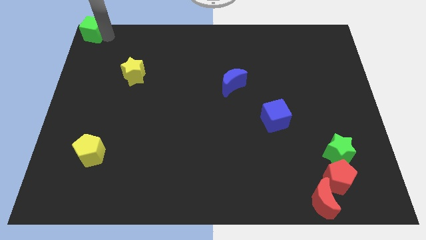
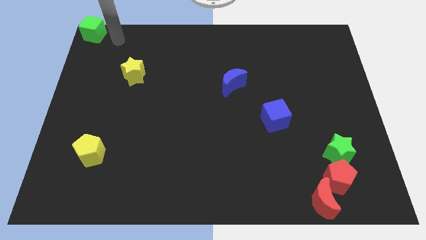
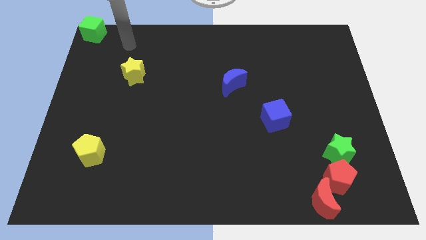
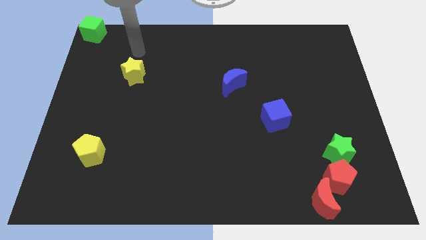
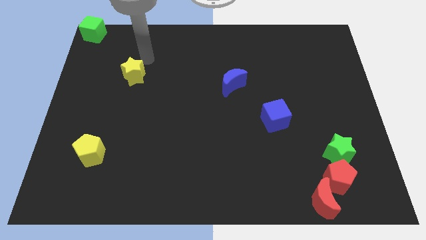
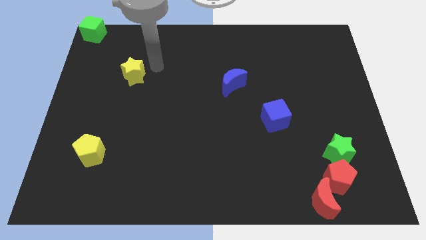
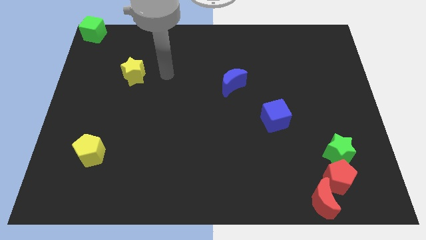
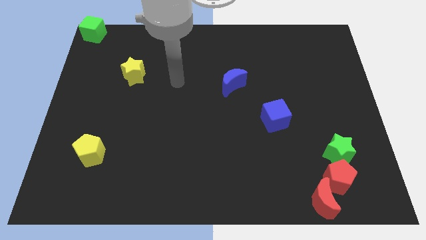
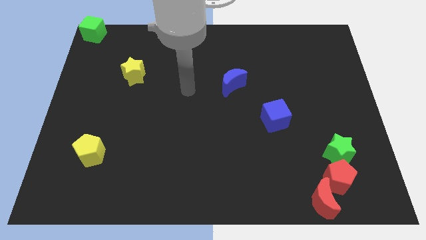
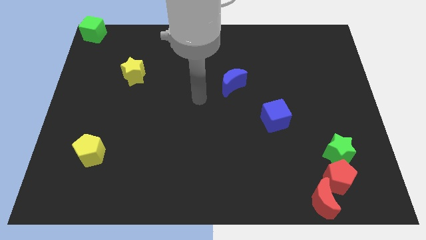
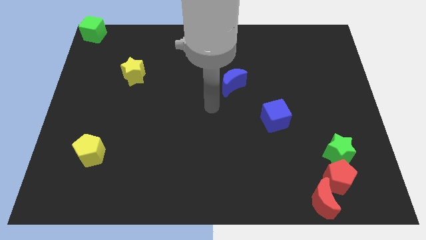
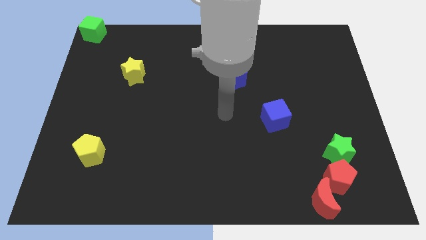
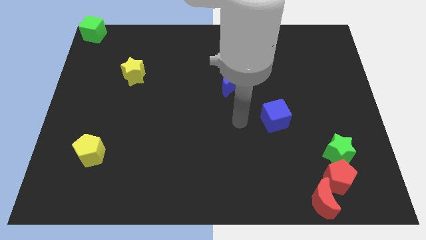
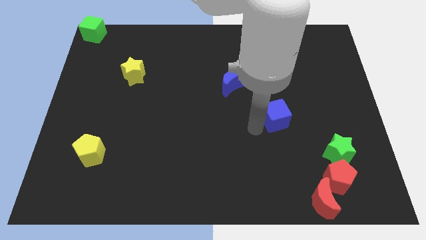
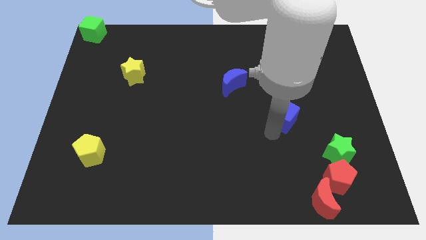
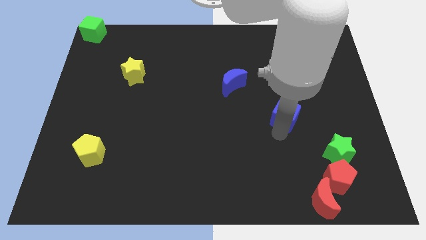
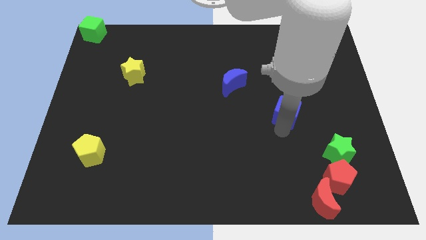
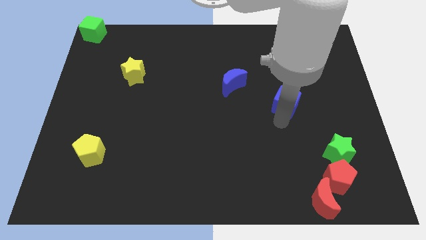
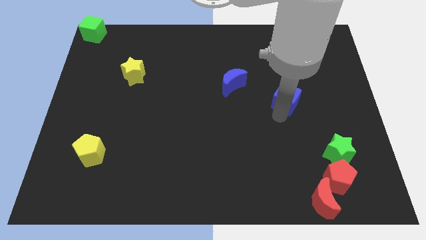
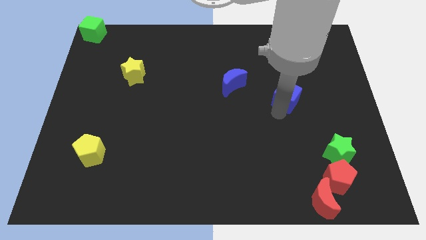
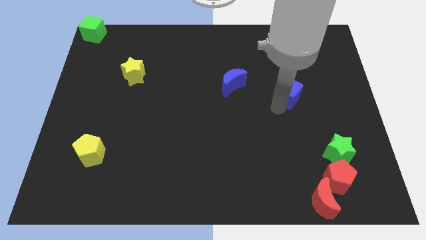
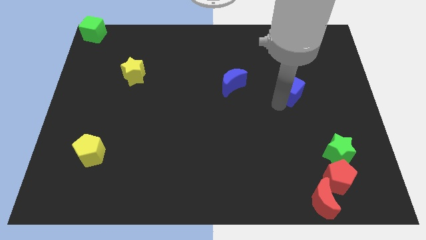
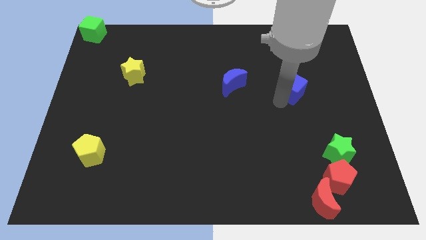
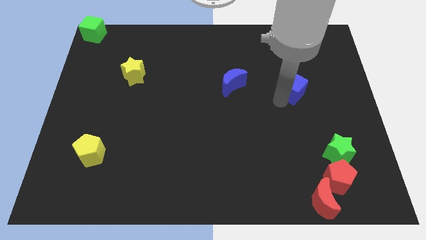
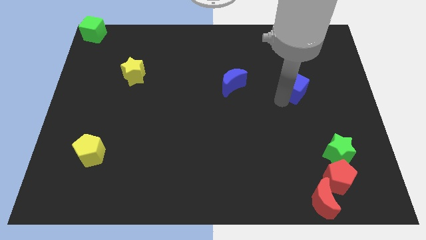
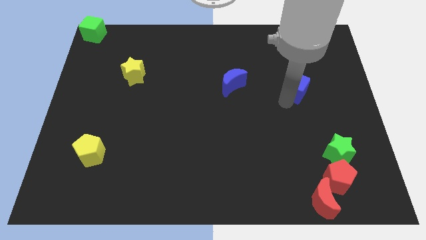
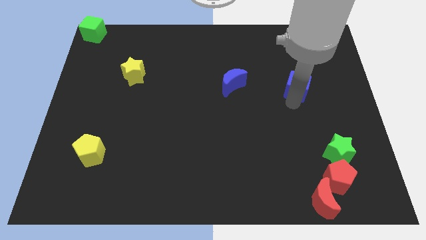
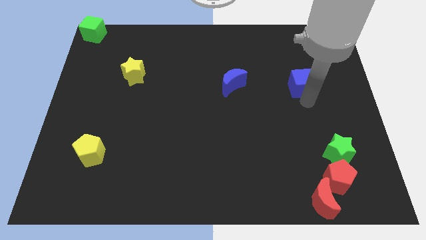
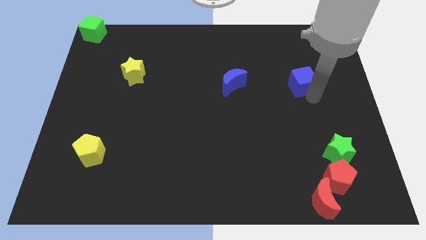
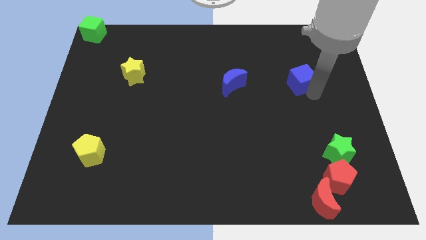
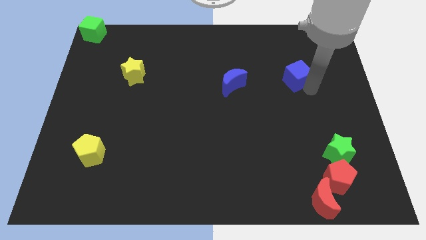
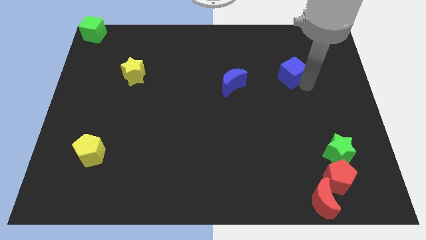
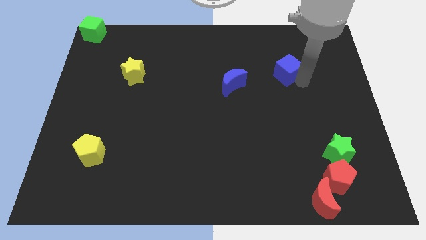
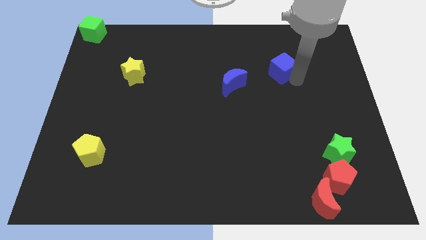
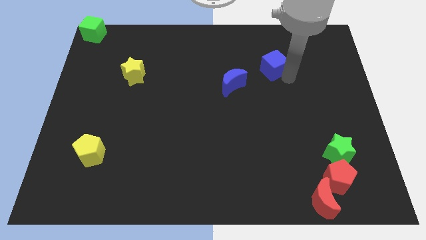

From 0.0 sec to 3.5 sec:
move your arm away from the green cube

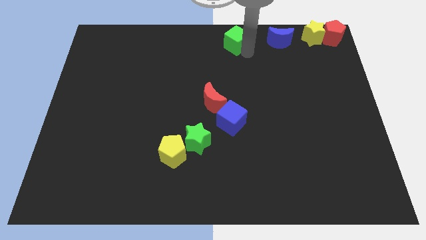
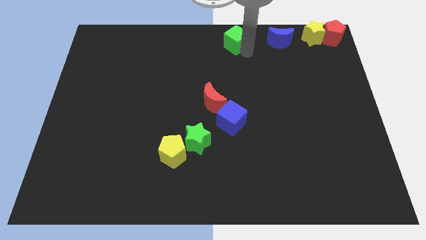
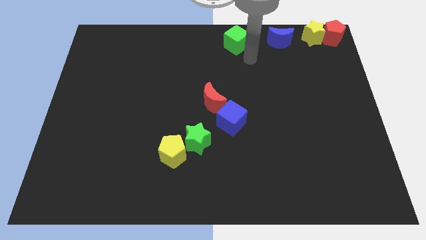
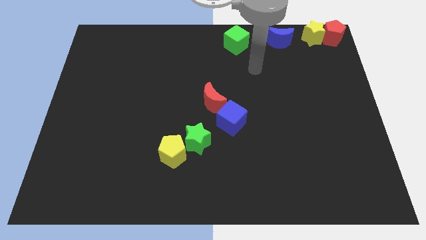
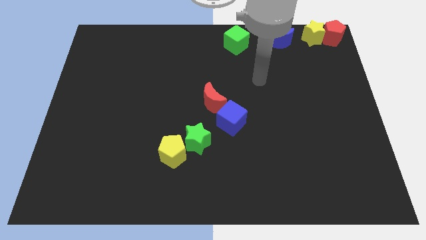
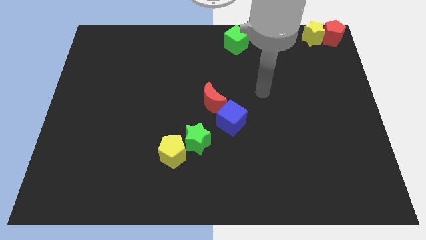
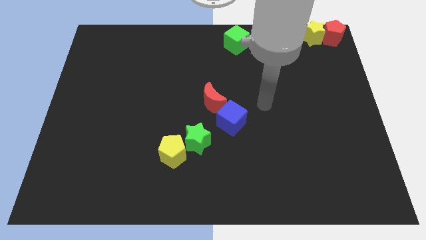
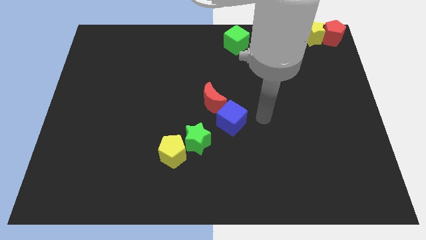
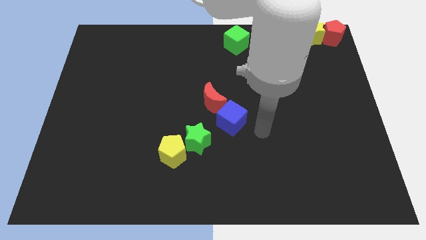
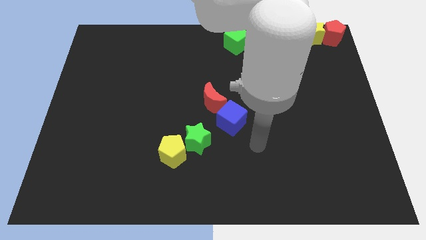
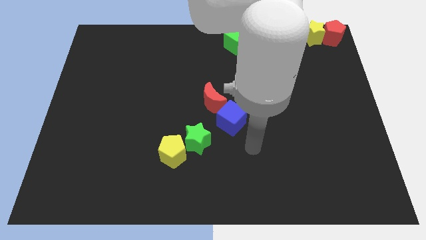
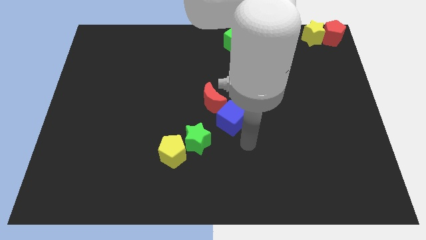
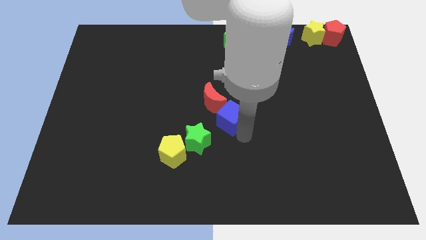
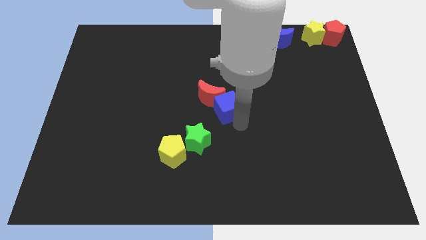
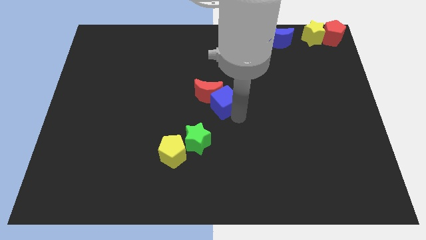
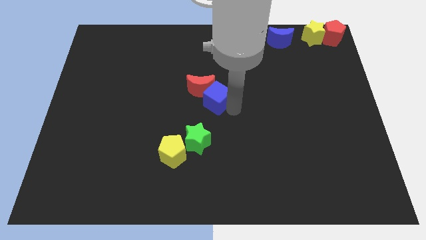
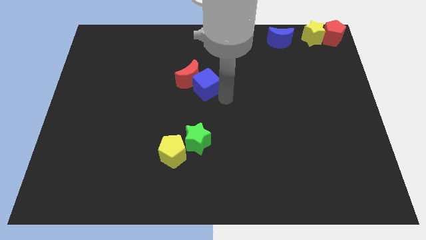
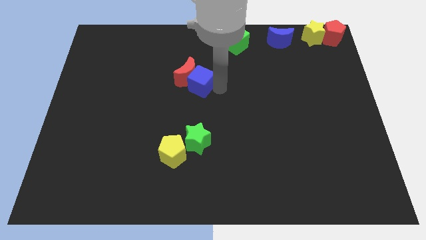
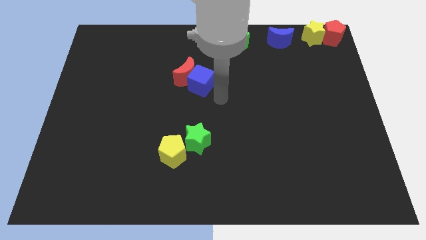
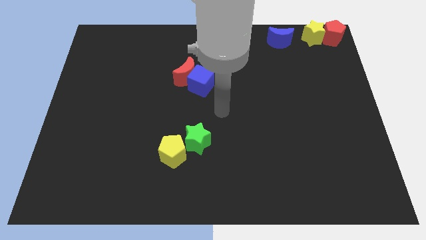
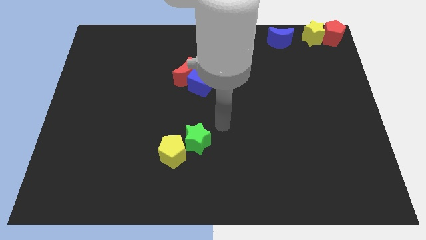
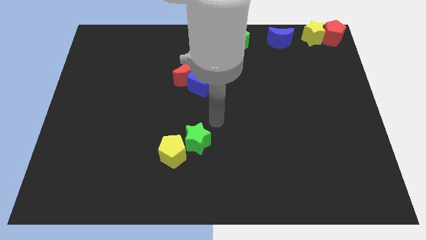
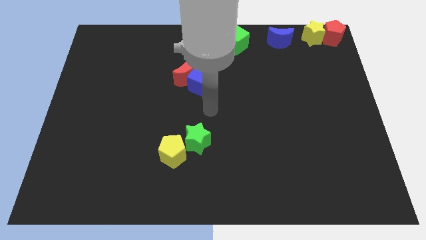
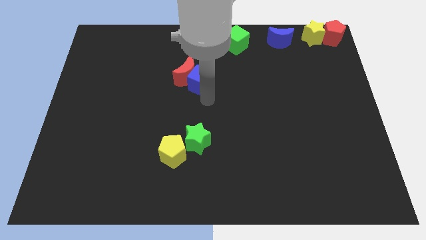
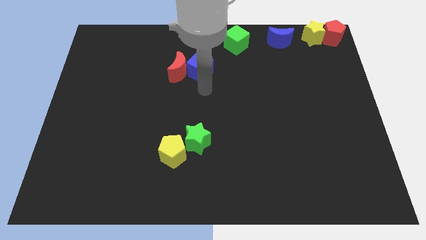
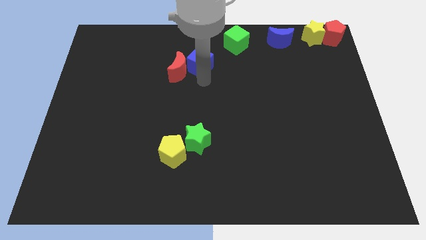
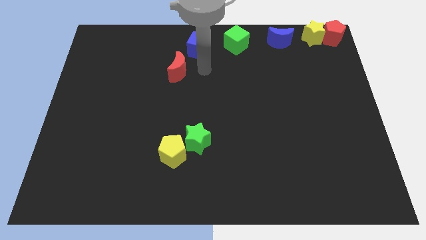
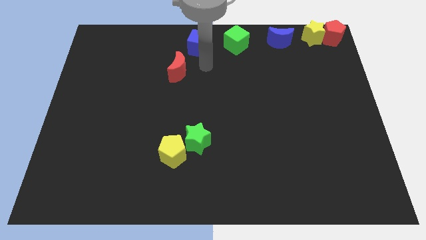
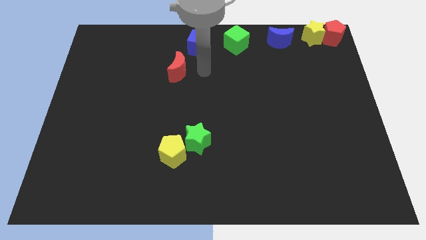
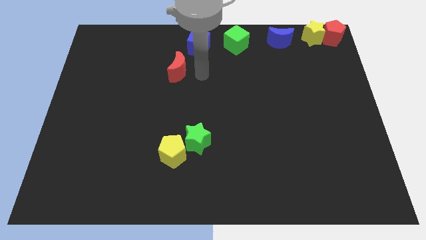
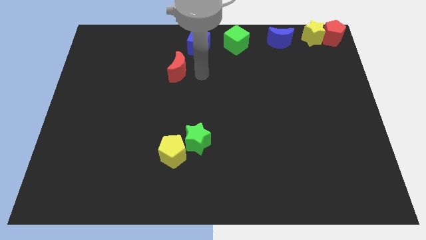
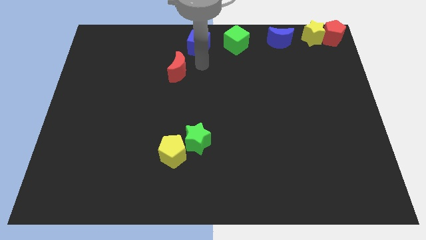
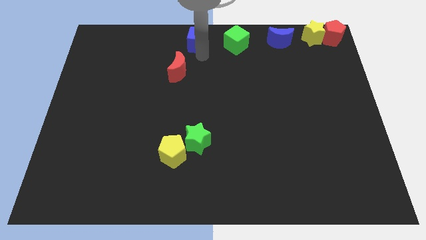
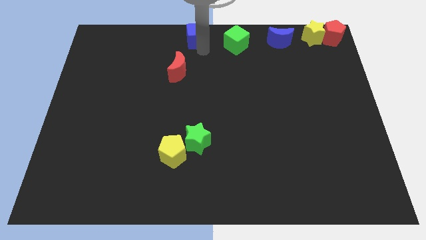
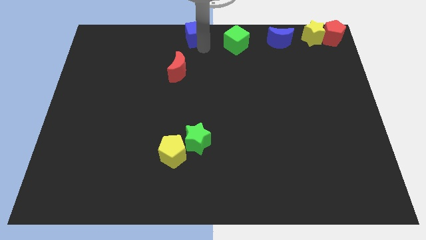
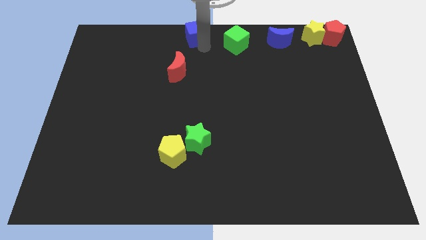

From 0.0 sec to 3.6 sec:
place the blue cube left to the green cube

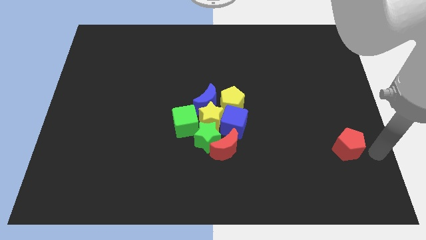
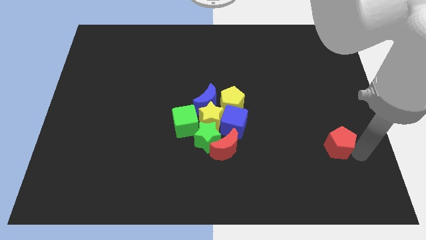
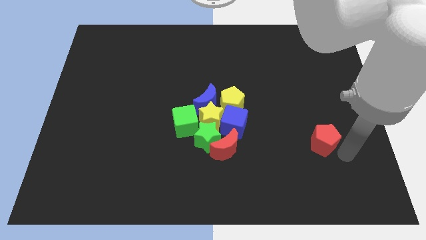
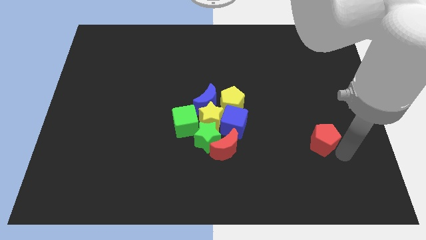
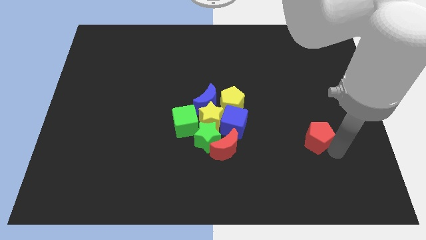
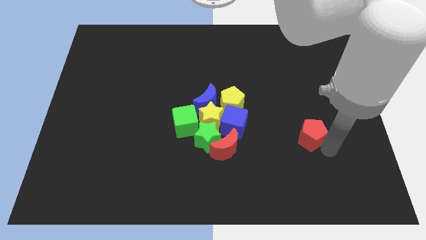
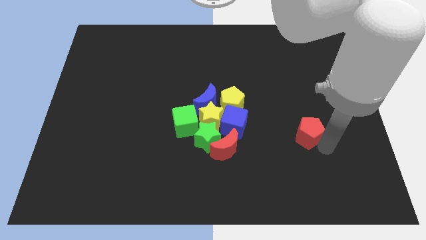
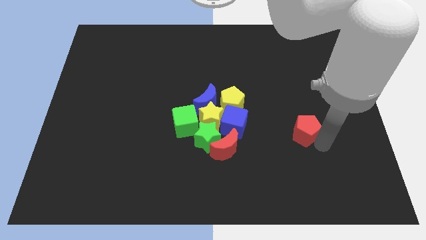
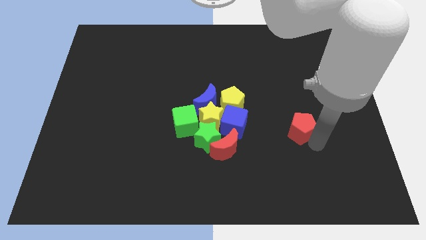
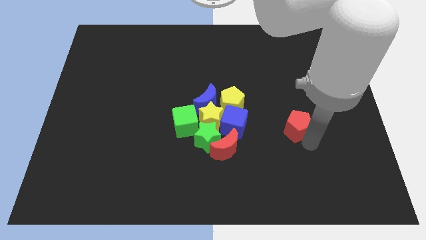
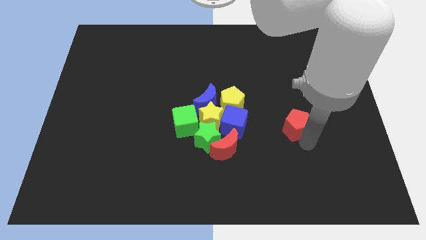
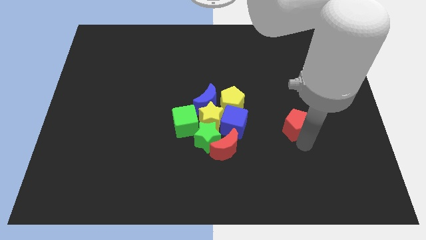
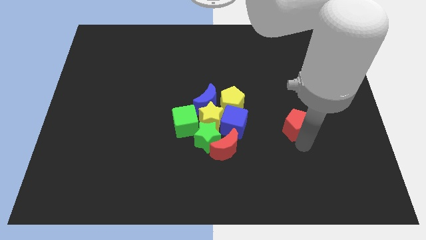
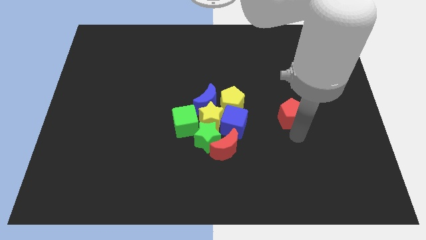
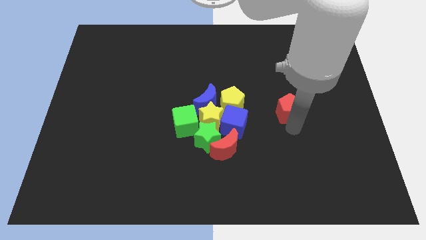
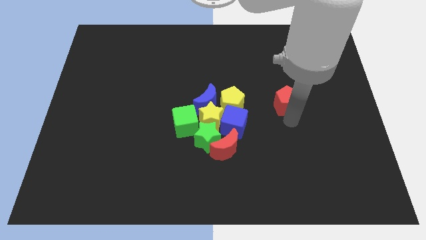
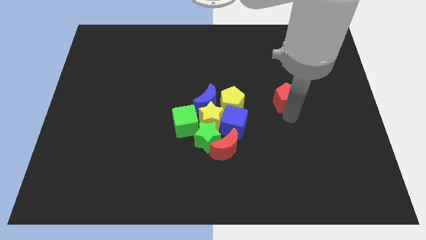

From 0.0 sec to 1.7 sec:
push the red pentagon parallel to the yellow pentagon
